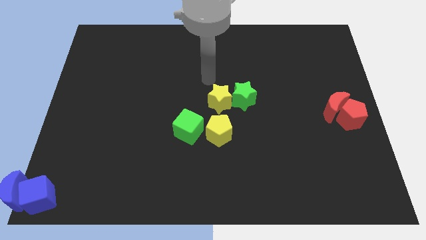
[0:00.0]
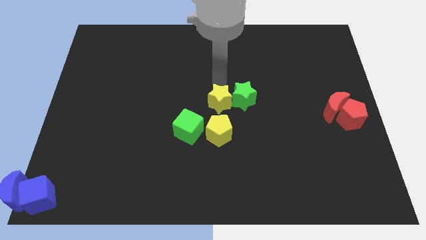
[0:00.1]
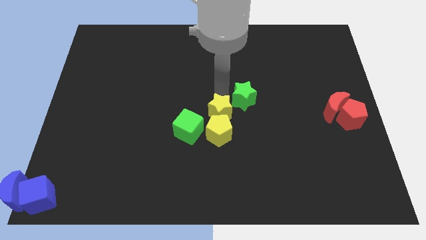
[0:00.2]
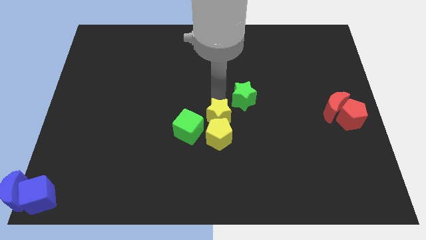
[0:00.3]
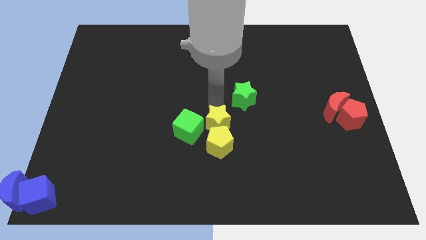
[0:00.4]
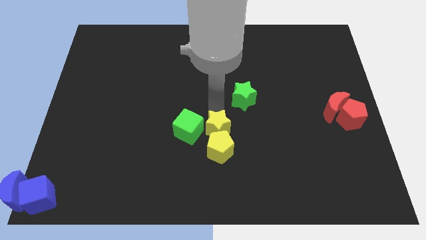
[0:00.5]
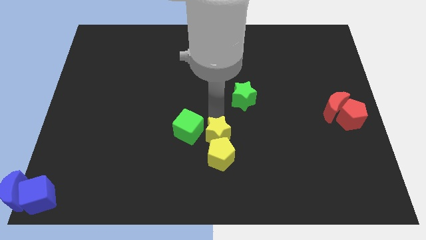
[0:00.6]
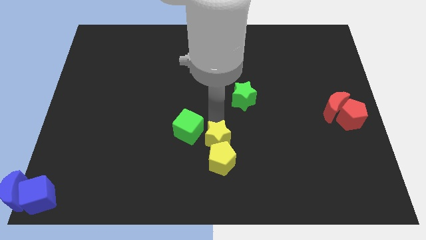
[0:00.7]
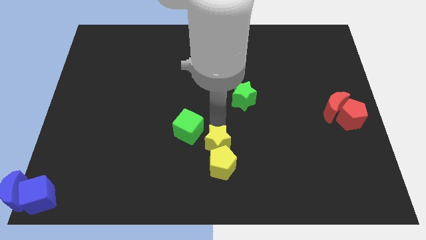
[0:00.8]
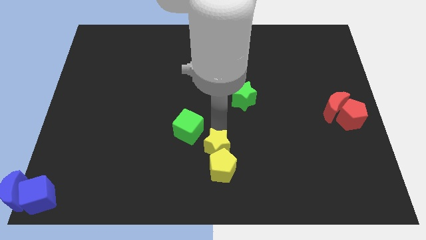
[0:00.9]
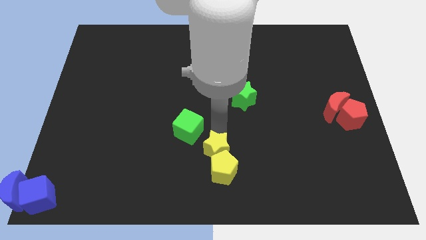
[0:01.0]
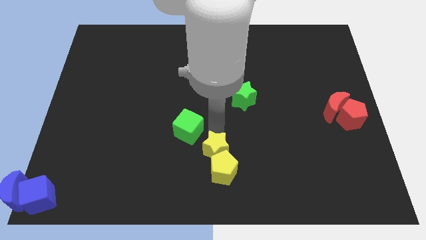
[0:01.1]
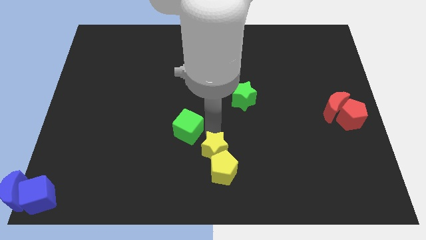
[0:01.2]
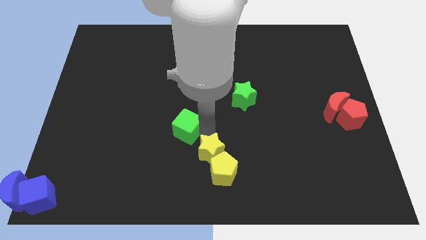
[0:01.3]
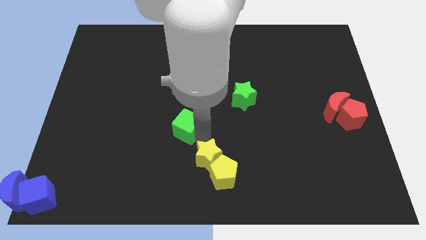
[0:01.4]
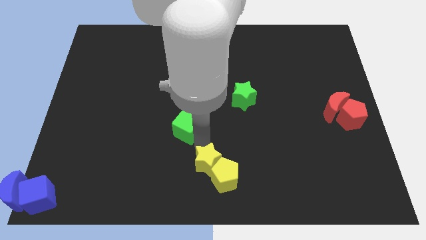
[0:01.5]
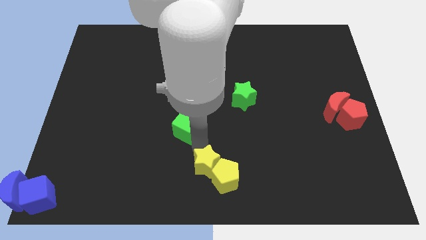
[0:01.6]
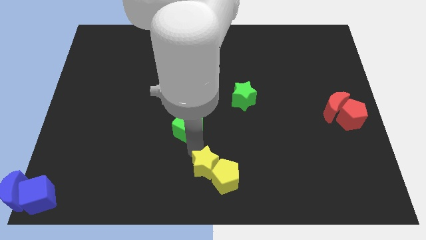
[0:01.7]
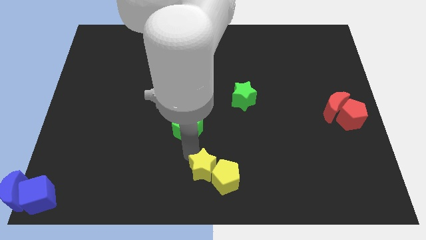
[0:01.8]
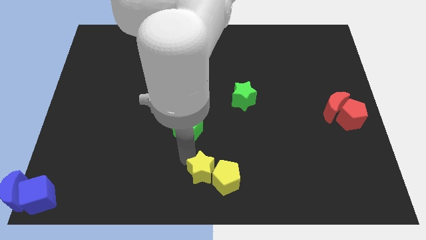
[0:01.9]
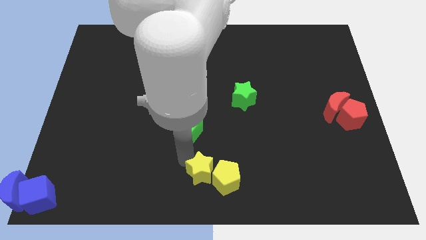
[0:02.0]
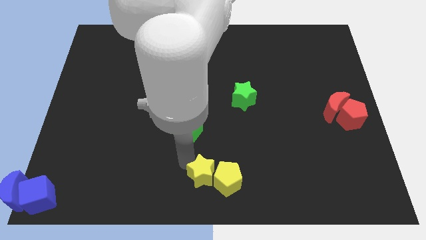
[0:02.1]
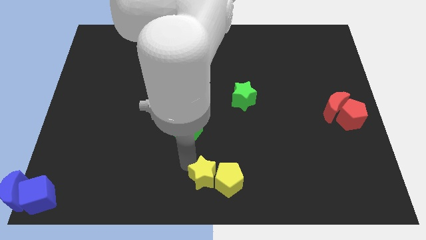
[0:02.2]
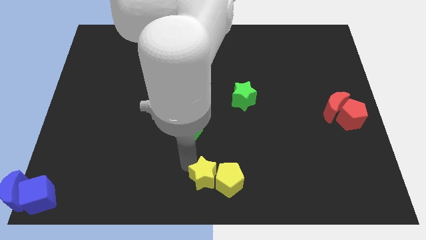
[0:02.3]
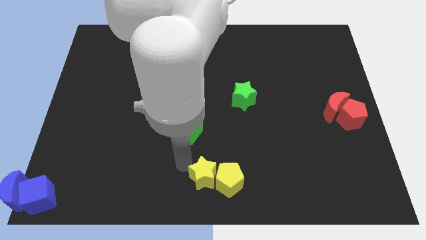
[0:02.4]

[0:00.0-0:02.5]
push the yellow blocks slightly to the bottom

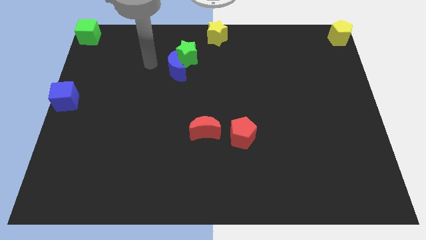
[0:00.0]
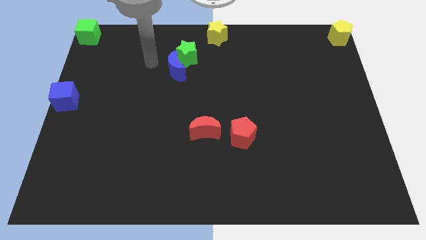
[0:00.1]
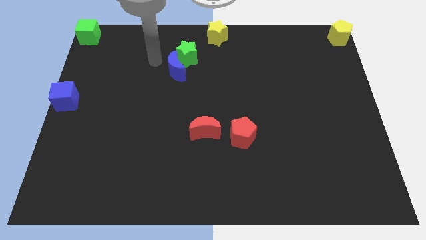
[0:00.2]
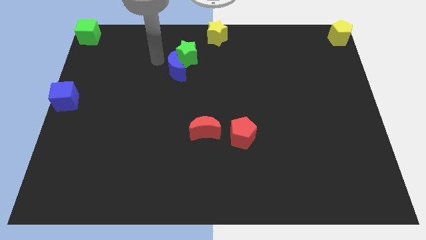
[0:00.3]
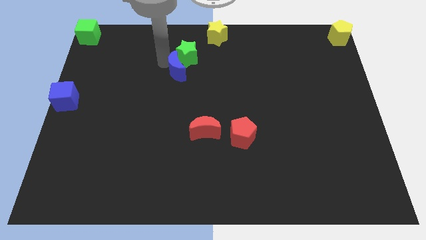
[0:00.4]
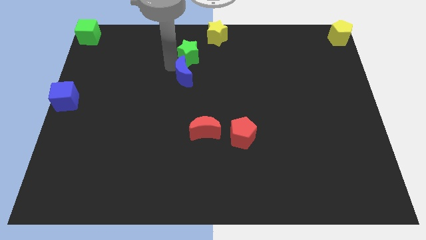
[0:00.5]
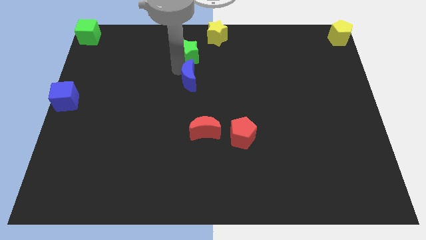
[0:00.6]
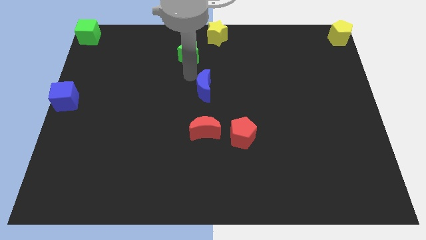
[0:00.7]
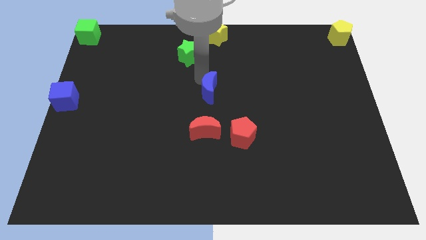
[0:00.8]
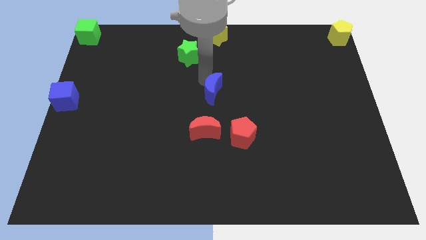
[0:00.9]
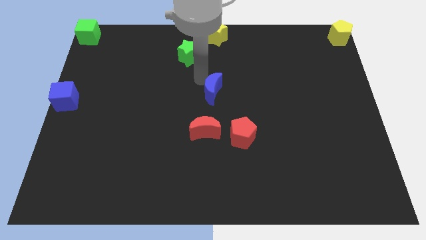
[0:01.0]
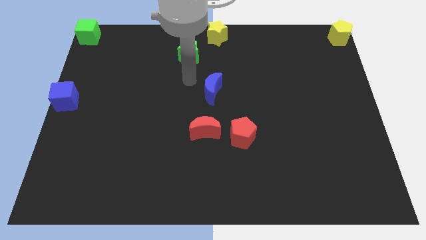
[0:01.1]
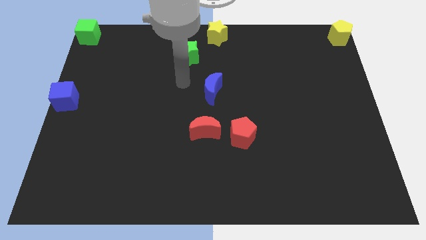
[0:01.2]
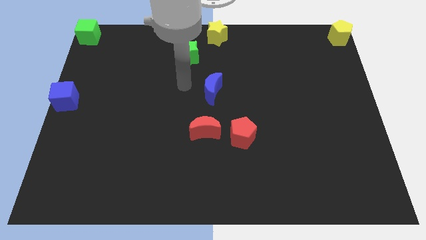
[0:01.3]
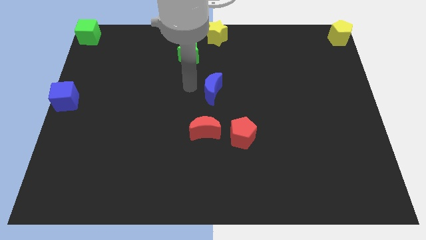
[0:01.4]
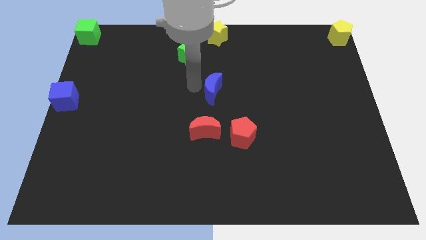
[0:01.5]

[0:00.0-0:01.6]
separate blue moon from green star

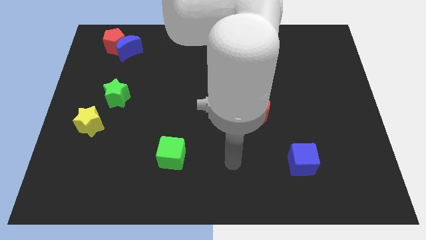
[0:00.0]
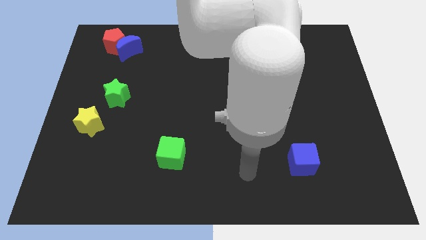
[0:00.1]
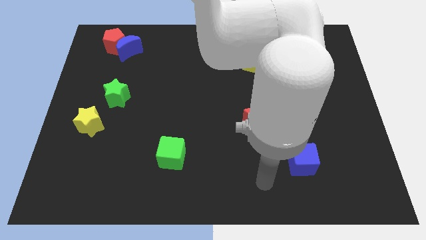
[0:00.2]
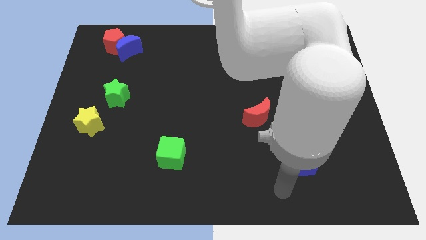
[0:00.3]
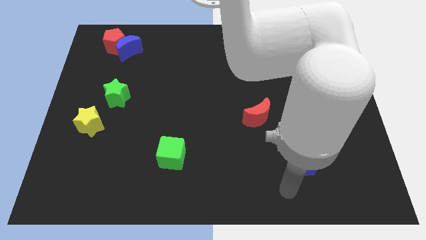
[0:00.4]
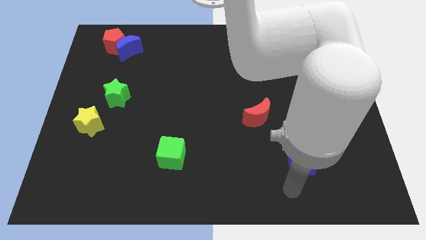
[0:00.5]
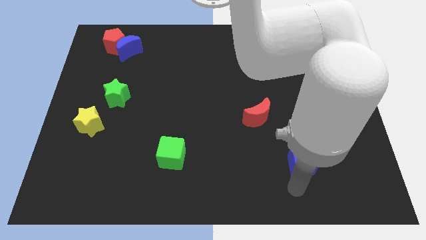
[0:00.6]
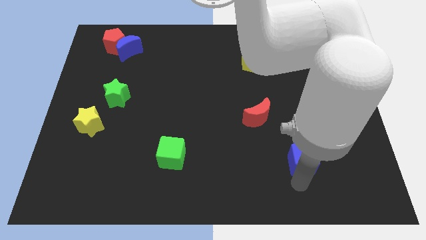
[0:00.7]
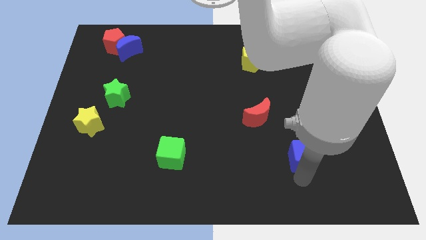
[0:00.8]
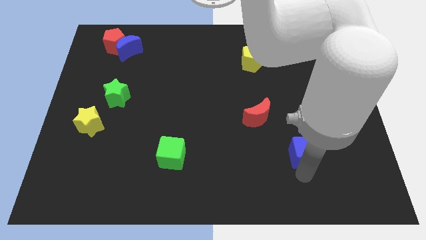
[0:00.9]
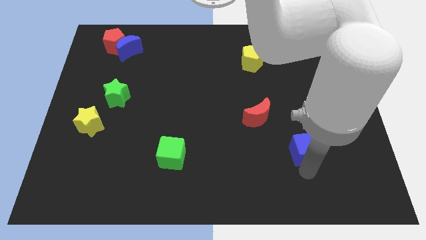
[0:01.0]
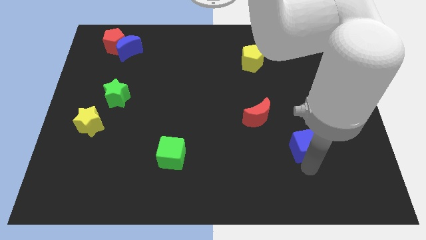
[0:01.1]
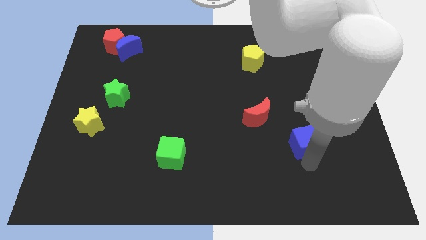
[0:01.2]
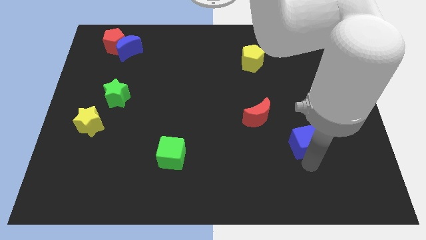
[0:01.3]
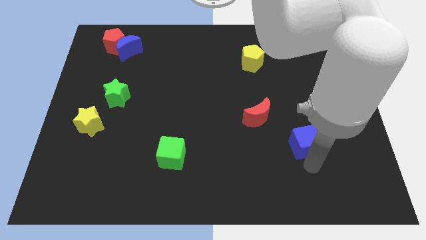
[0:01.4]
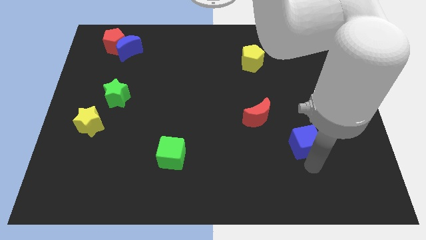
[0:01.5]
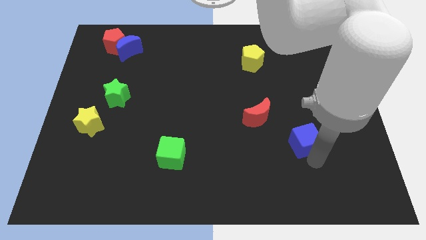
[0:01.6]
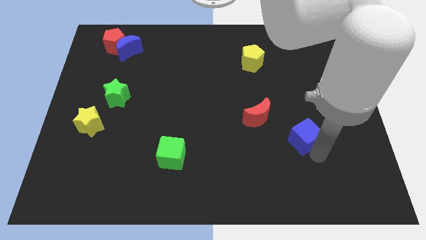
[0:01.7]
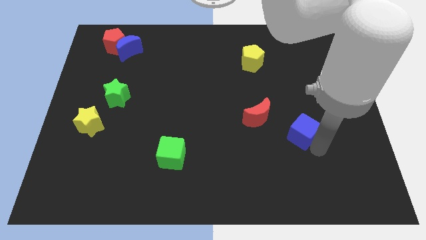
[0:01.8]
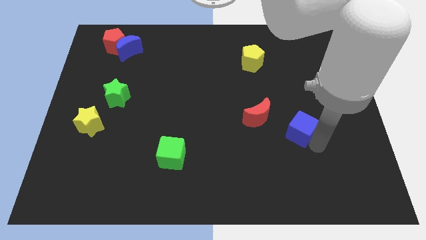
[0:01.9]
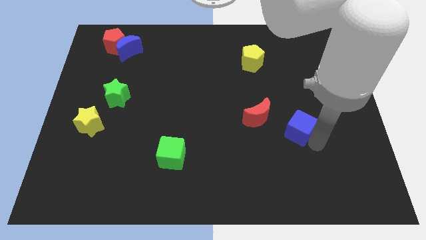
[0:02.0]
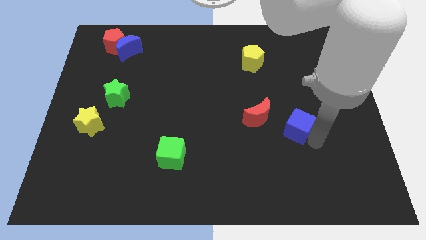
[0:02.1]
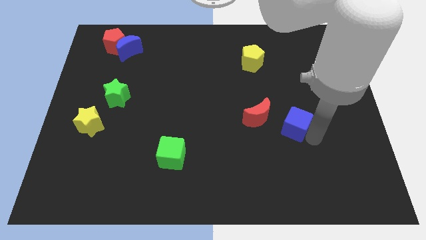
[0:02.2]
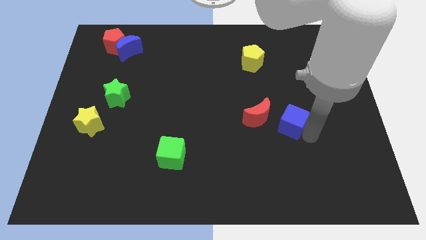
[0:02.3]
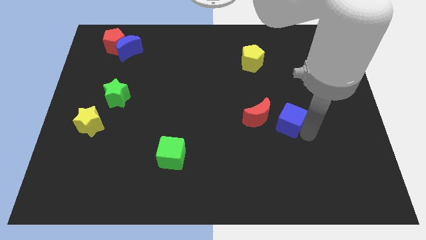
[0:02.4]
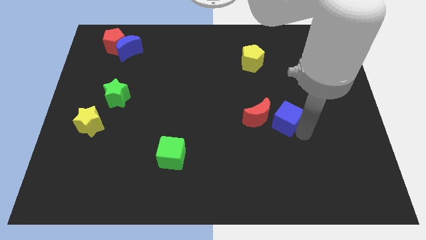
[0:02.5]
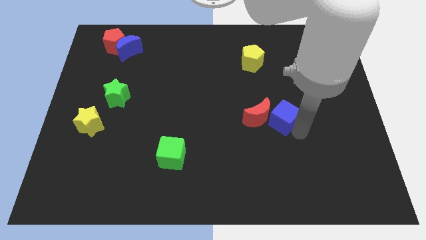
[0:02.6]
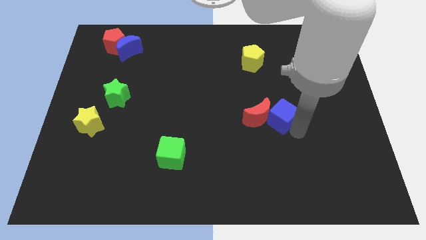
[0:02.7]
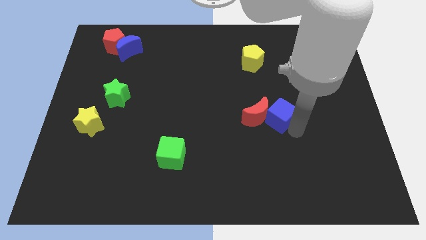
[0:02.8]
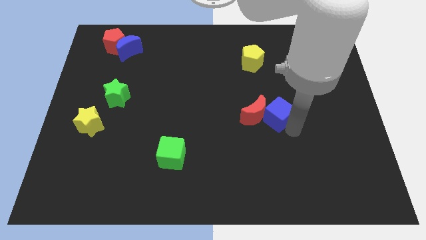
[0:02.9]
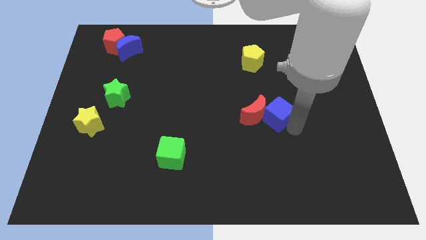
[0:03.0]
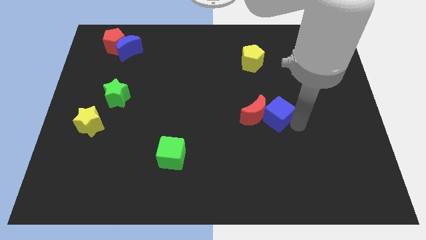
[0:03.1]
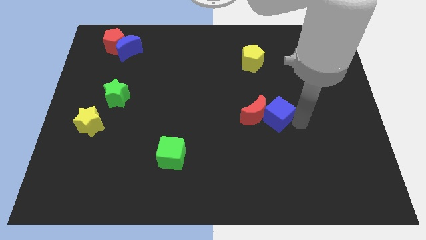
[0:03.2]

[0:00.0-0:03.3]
push the blue cube into the red moon

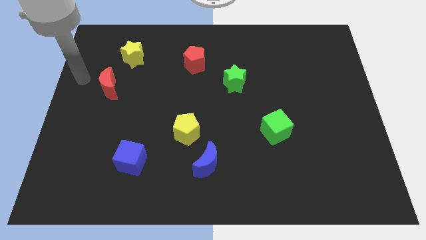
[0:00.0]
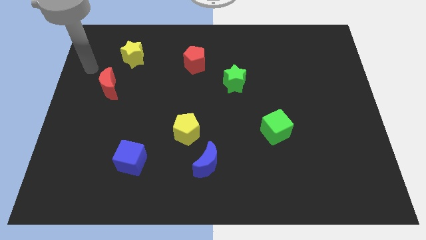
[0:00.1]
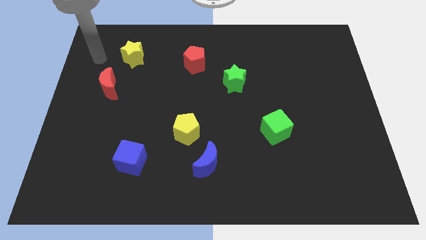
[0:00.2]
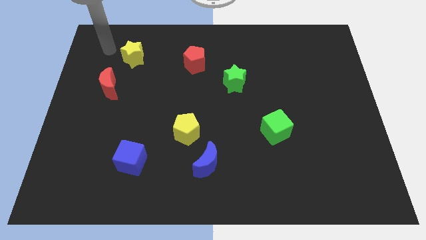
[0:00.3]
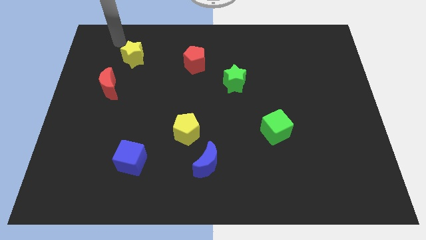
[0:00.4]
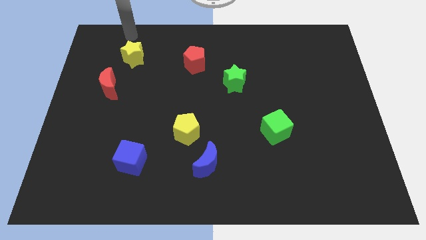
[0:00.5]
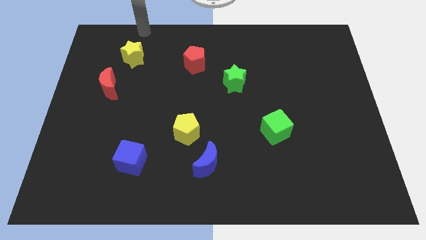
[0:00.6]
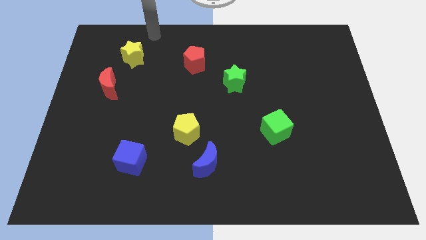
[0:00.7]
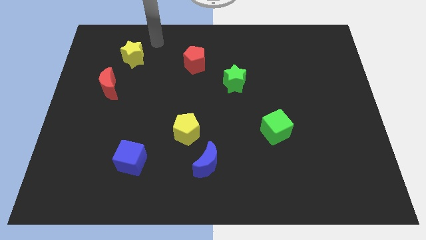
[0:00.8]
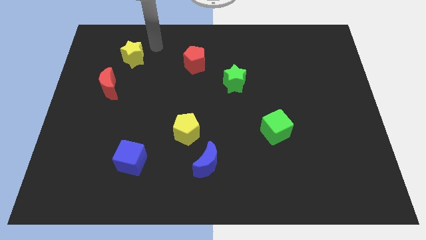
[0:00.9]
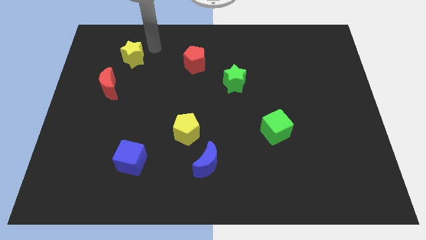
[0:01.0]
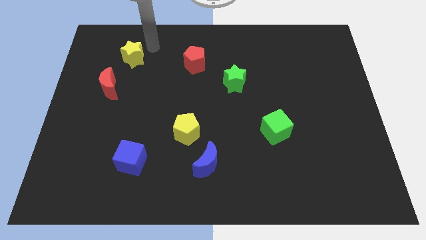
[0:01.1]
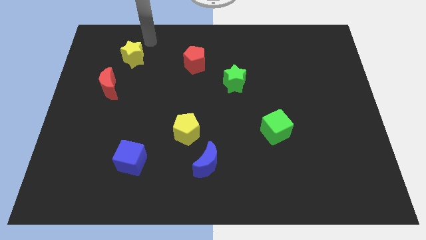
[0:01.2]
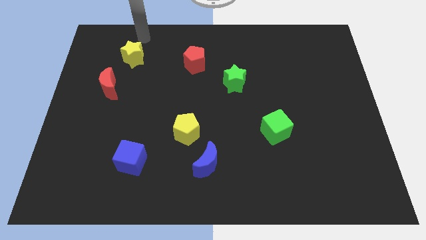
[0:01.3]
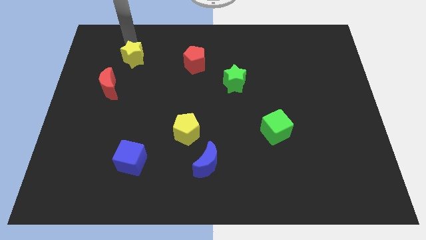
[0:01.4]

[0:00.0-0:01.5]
slide your arm to the top of yellow star

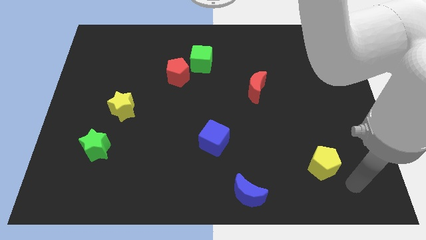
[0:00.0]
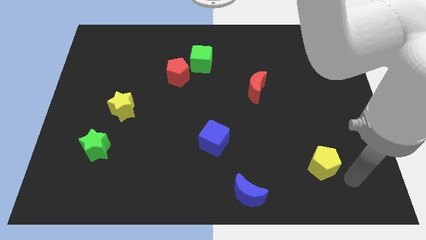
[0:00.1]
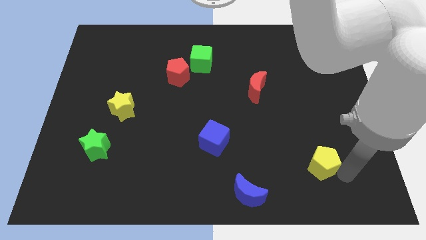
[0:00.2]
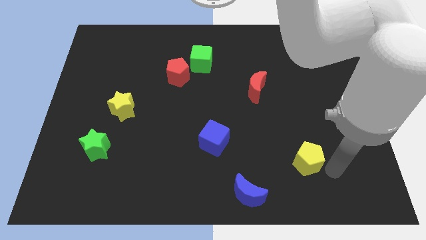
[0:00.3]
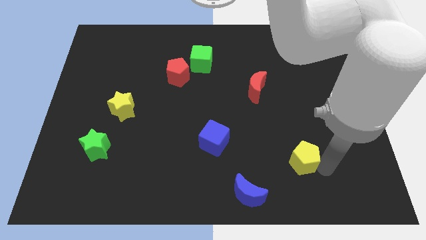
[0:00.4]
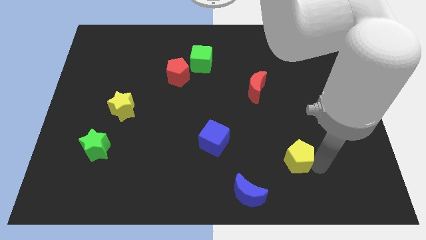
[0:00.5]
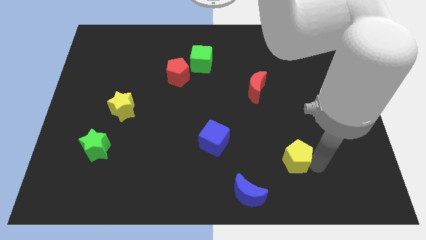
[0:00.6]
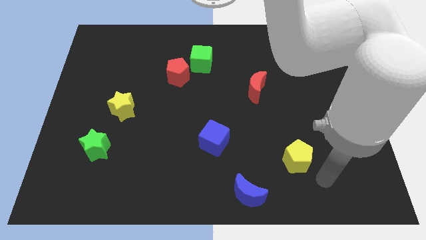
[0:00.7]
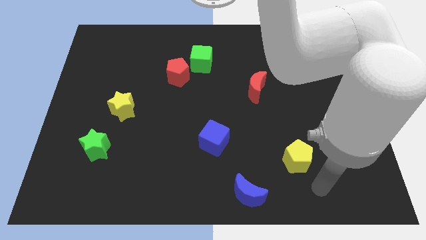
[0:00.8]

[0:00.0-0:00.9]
push yellow pentagon to the left
